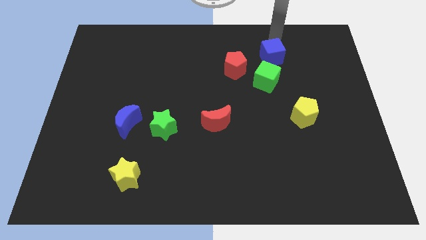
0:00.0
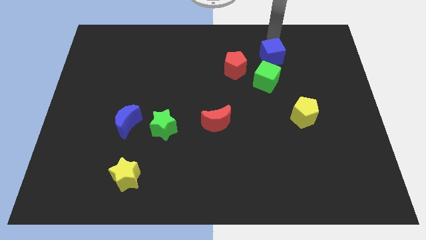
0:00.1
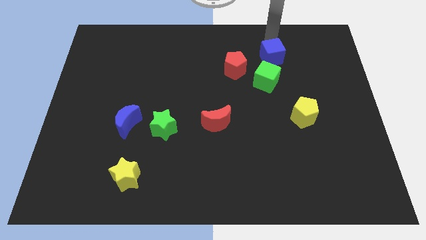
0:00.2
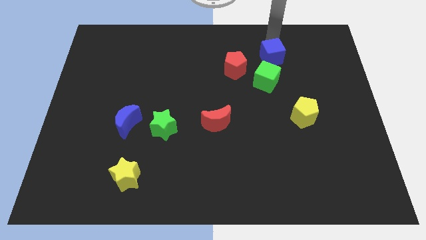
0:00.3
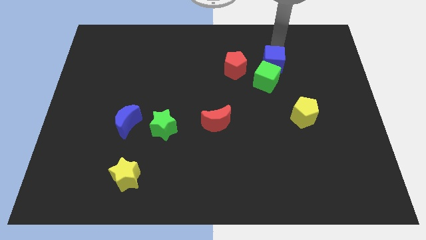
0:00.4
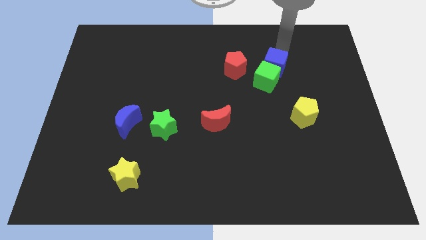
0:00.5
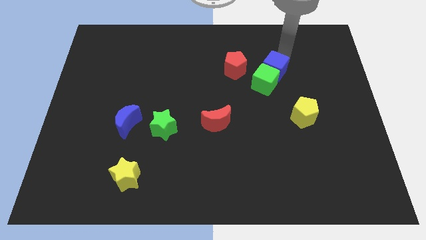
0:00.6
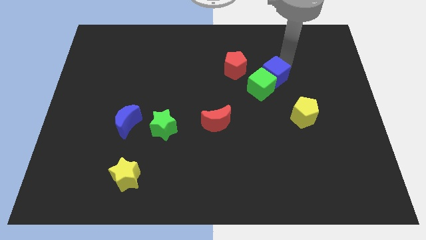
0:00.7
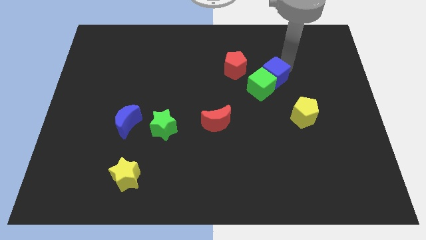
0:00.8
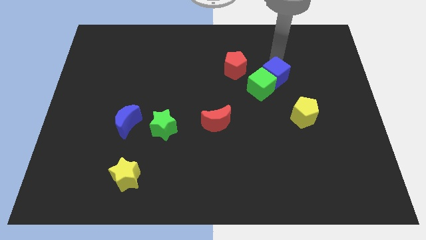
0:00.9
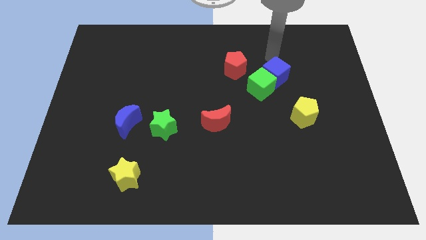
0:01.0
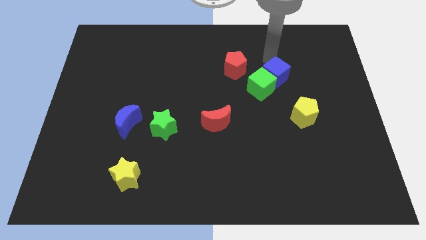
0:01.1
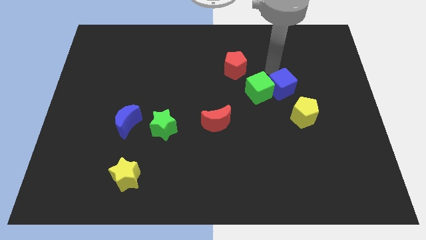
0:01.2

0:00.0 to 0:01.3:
push the blue cube into the green cube

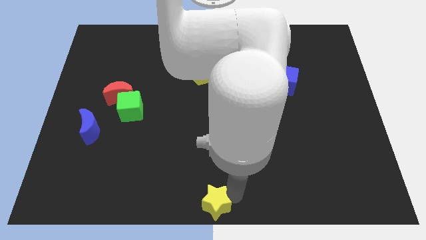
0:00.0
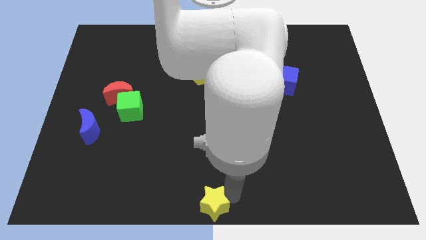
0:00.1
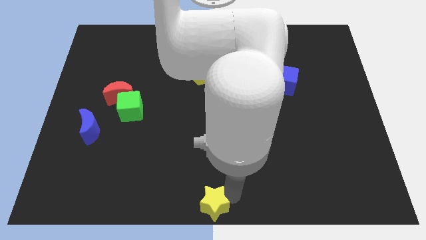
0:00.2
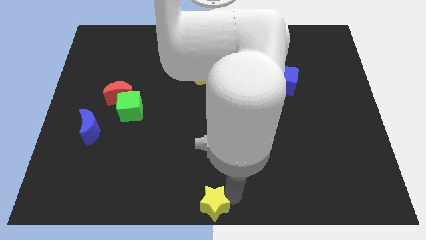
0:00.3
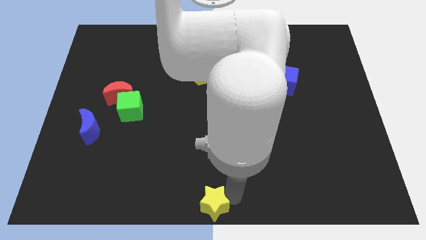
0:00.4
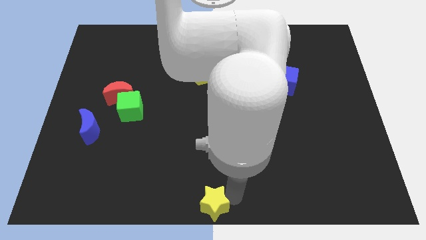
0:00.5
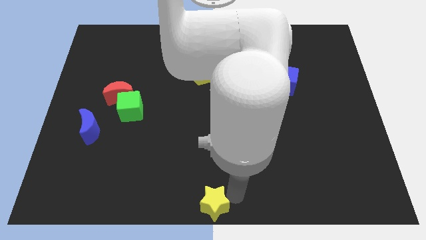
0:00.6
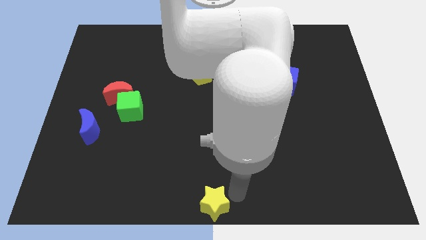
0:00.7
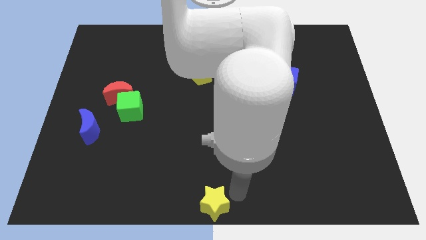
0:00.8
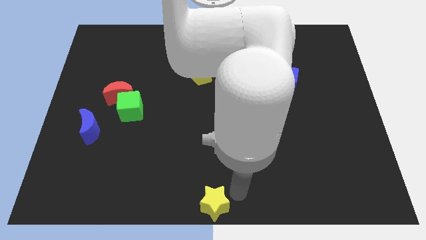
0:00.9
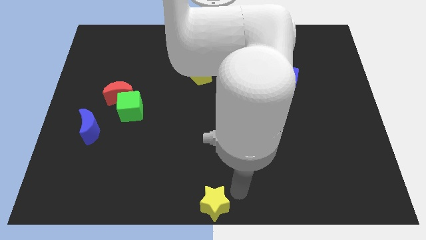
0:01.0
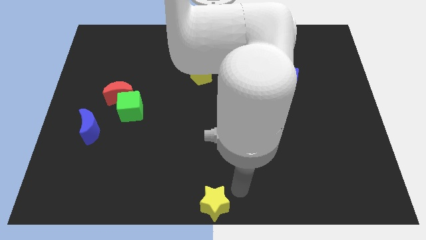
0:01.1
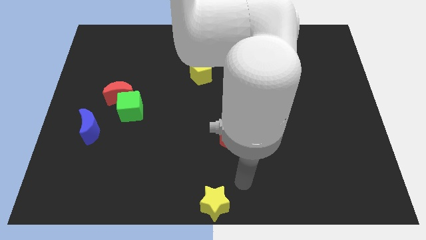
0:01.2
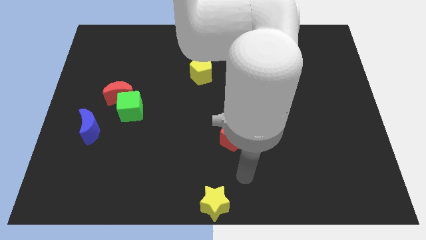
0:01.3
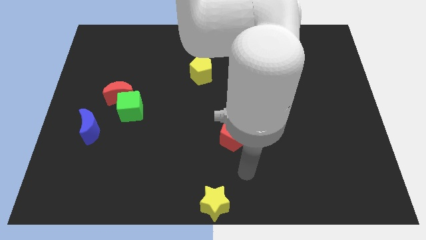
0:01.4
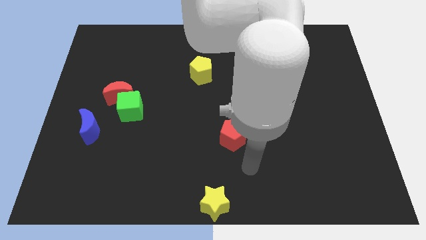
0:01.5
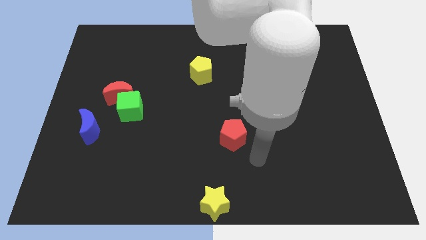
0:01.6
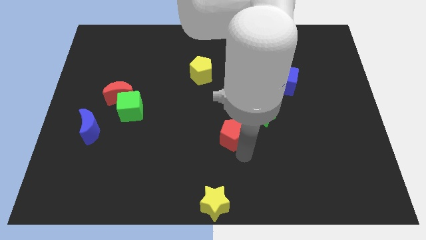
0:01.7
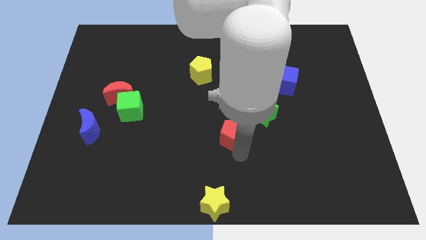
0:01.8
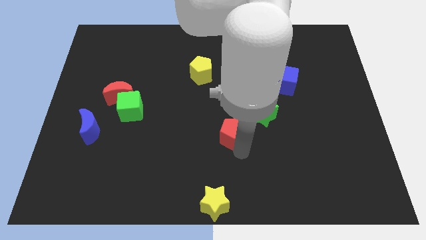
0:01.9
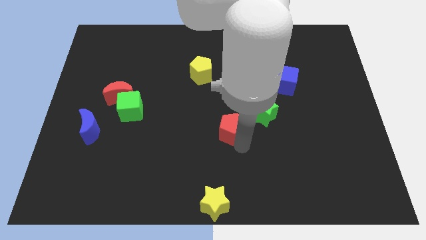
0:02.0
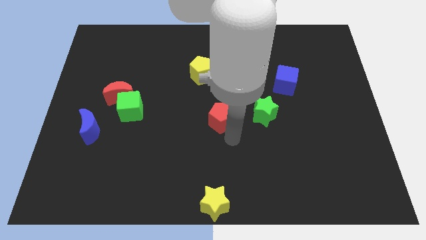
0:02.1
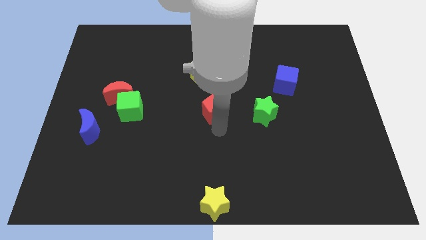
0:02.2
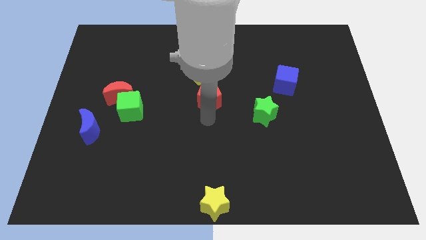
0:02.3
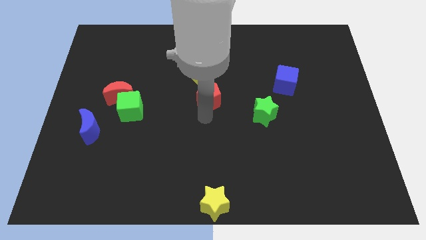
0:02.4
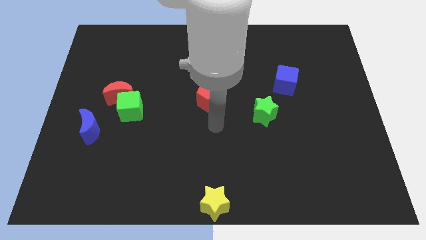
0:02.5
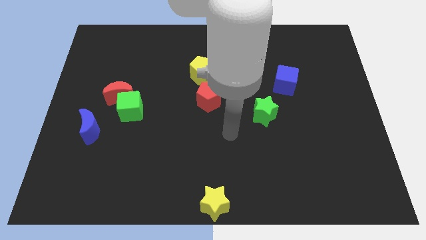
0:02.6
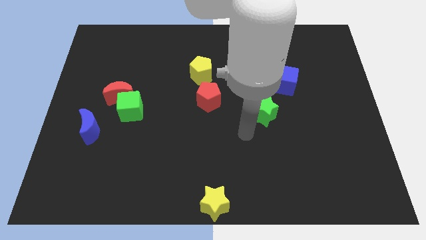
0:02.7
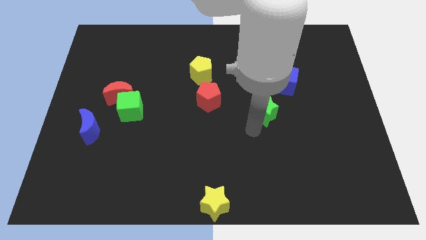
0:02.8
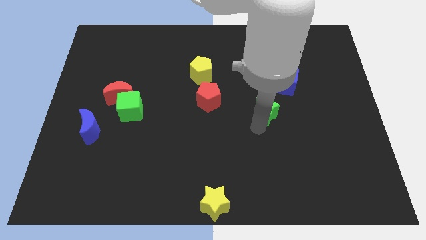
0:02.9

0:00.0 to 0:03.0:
place the red pentagon below the yellow pentagon

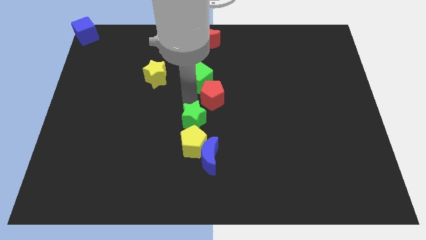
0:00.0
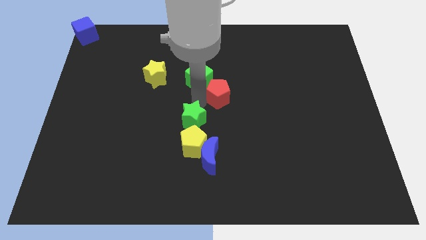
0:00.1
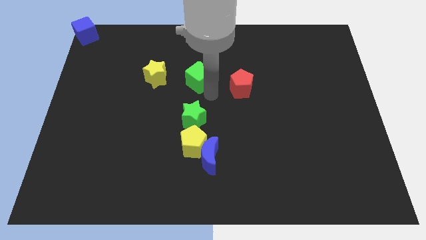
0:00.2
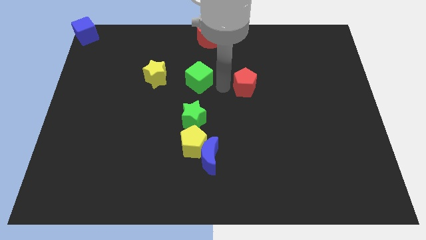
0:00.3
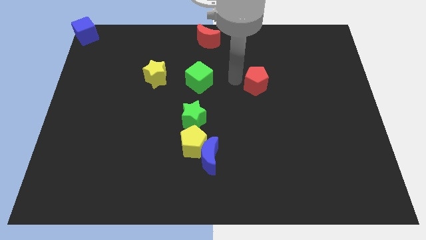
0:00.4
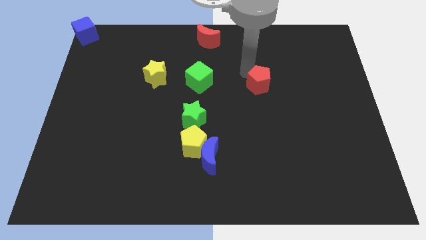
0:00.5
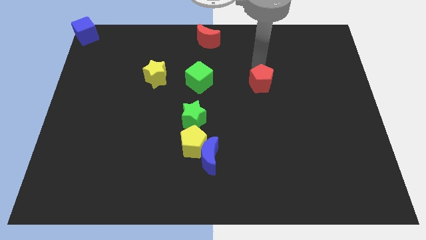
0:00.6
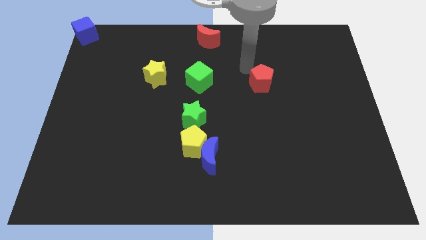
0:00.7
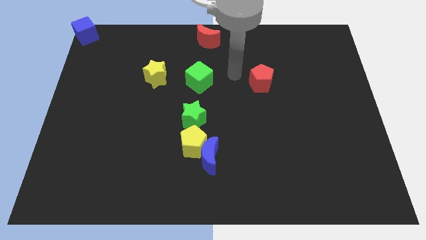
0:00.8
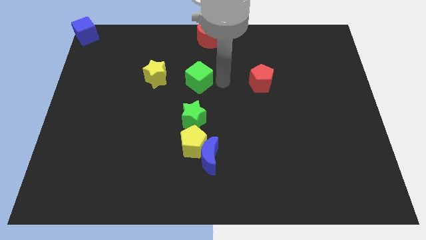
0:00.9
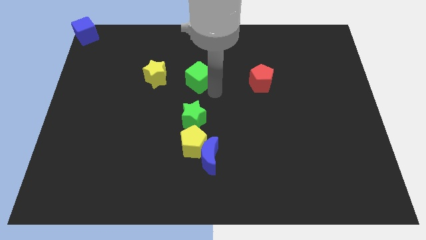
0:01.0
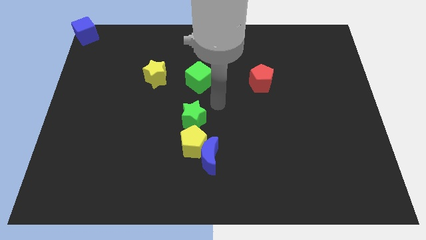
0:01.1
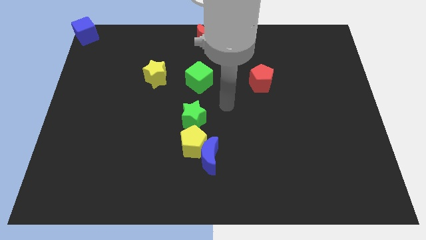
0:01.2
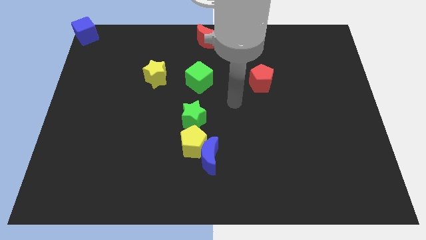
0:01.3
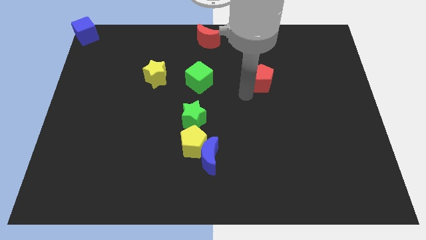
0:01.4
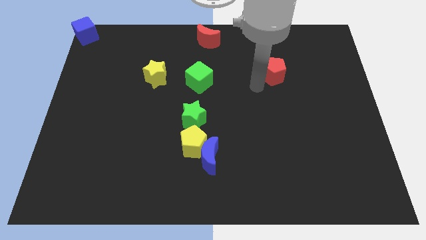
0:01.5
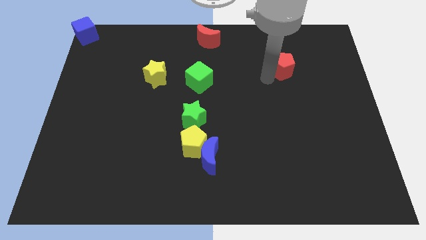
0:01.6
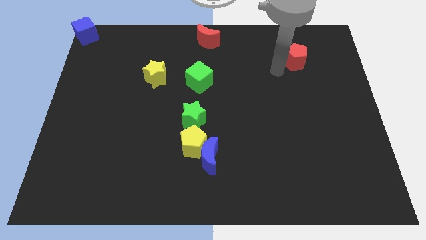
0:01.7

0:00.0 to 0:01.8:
separate the red pentagon from the green cube

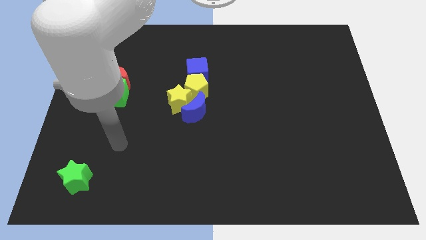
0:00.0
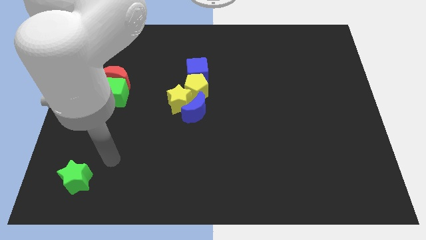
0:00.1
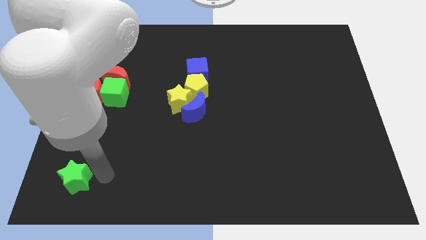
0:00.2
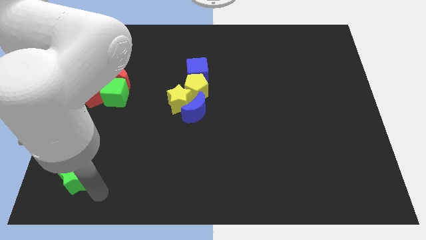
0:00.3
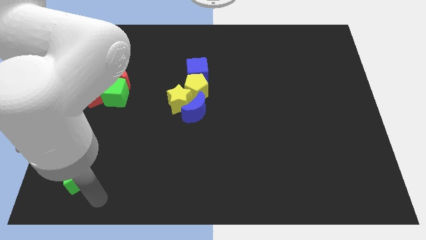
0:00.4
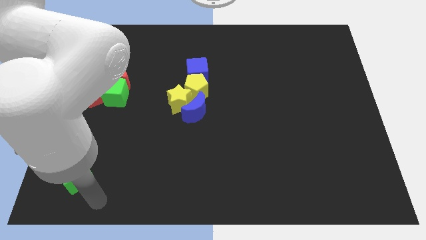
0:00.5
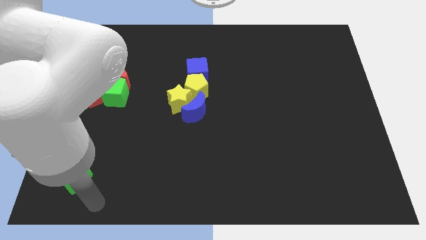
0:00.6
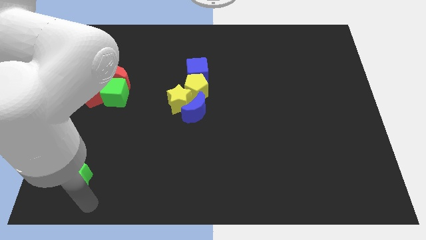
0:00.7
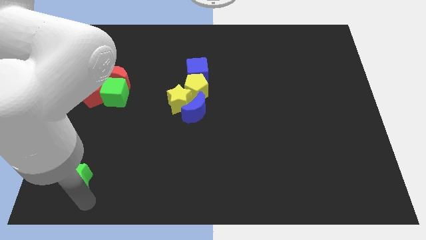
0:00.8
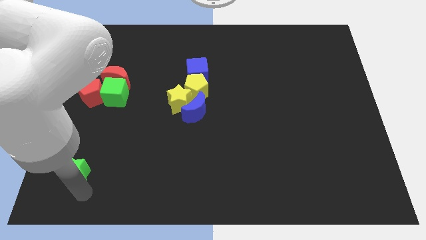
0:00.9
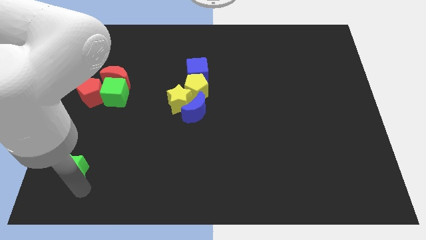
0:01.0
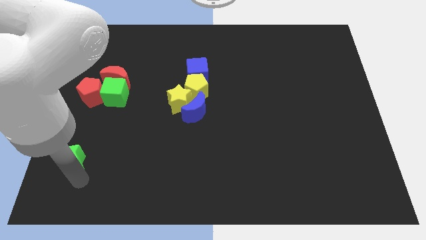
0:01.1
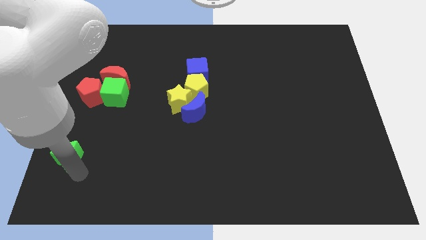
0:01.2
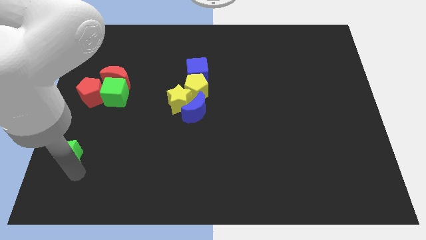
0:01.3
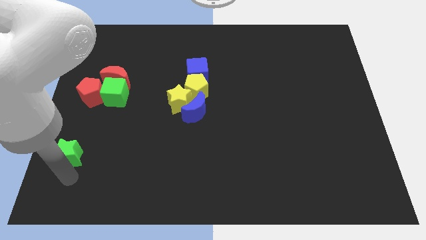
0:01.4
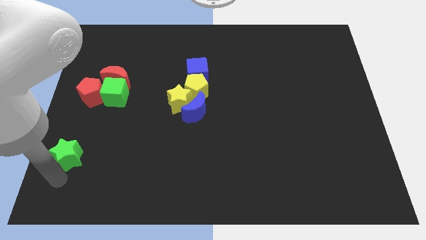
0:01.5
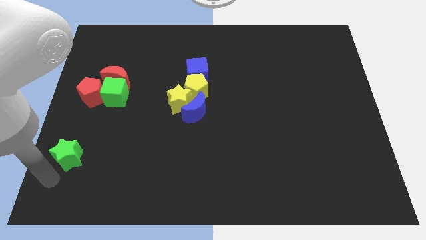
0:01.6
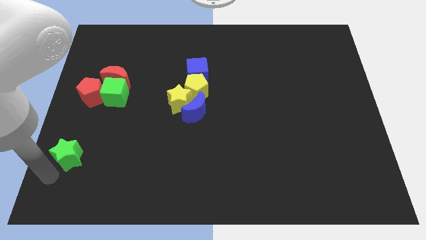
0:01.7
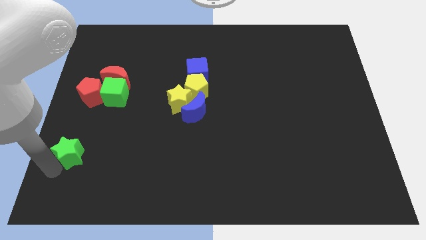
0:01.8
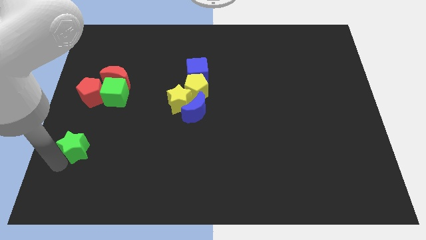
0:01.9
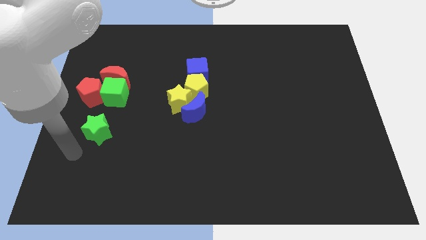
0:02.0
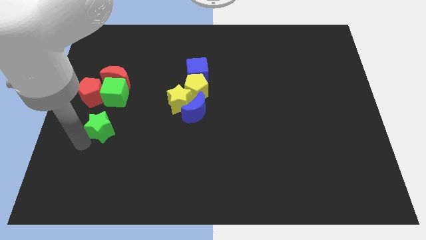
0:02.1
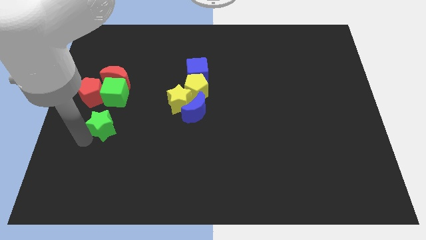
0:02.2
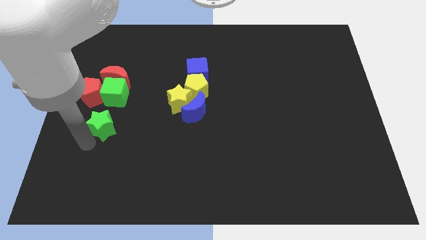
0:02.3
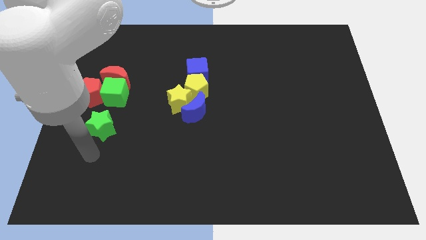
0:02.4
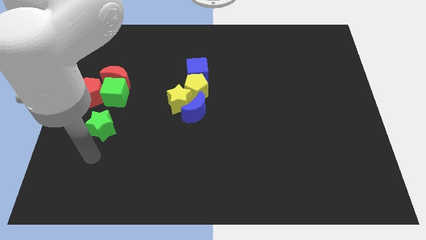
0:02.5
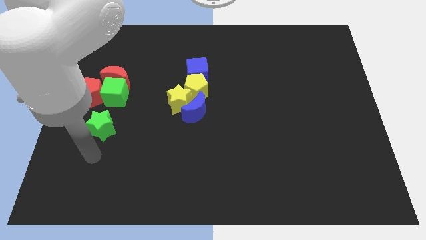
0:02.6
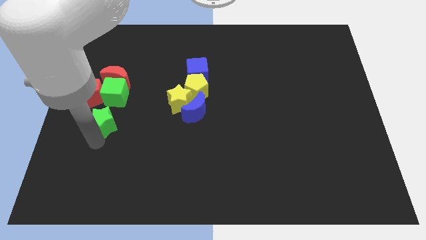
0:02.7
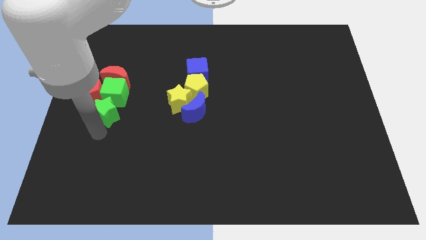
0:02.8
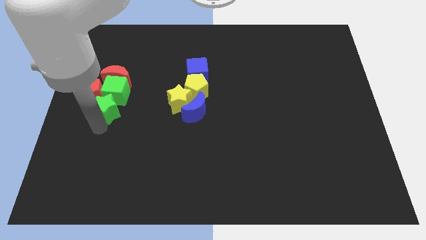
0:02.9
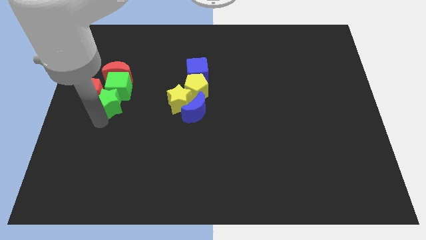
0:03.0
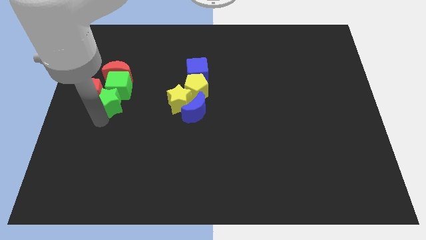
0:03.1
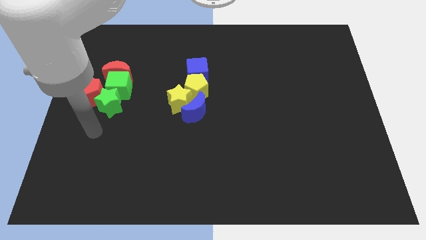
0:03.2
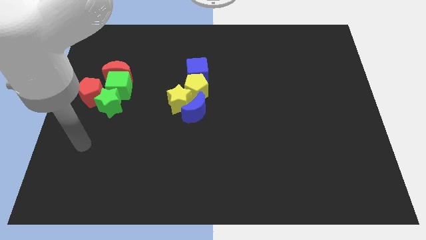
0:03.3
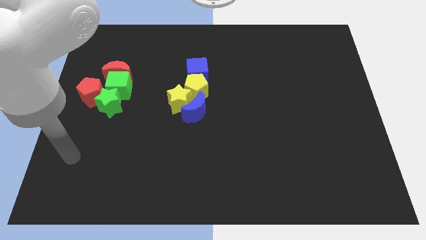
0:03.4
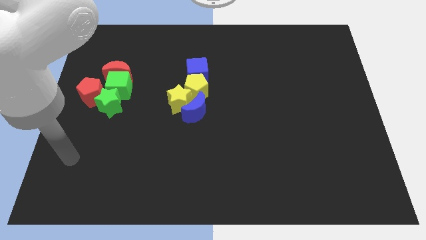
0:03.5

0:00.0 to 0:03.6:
move the green star below the green cube
